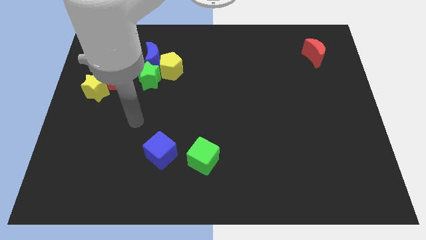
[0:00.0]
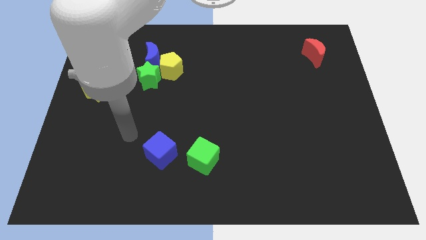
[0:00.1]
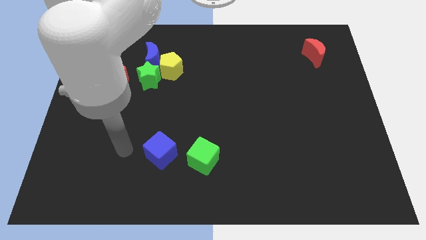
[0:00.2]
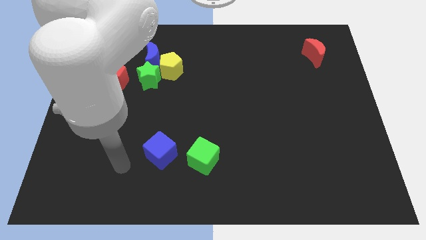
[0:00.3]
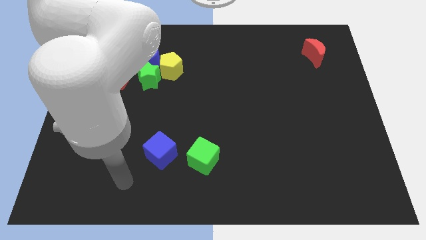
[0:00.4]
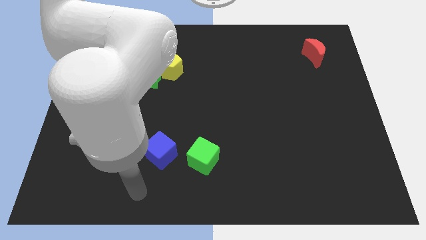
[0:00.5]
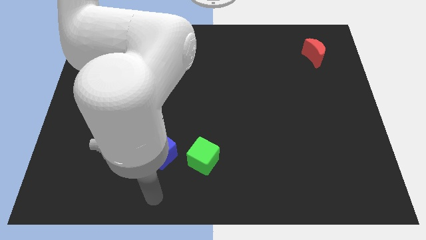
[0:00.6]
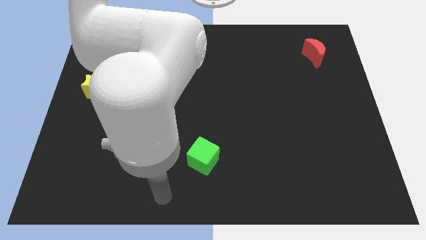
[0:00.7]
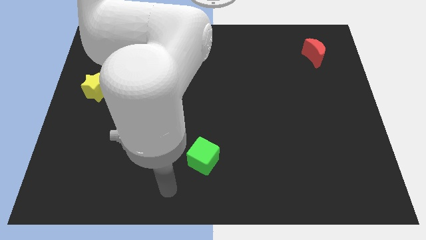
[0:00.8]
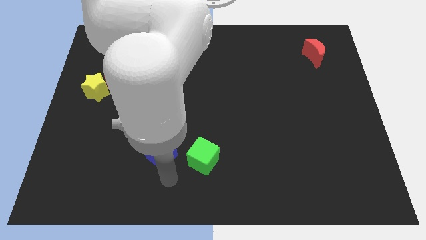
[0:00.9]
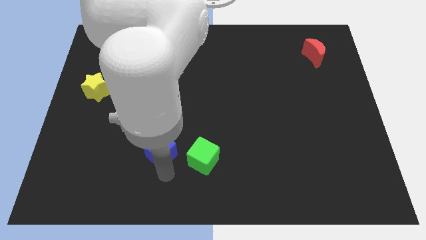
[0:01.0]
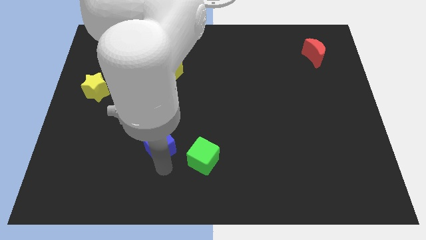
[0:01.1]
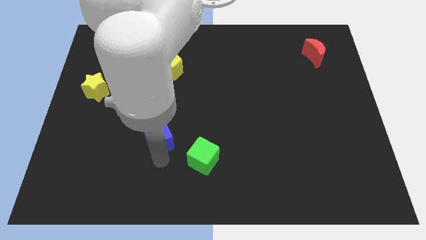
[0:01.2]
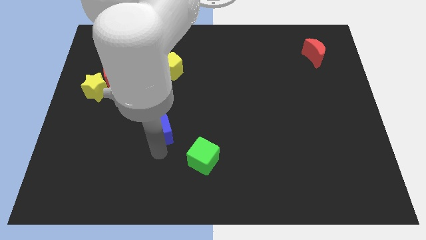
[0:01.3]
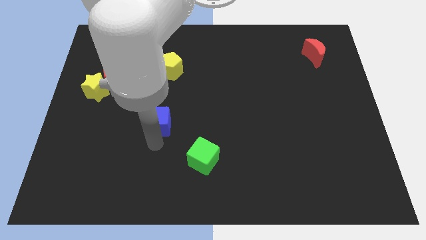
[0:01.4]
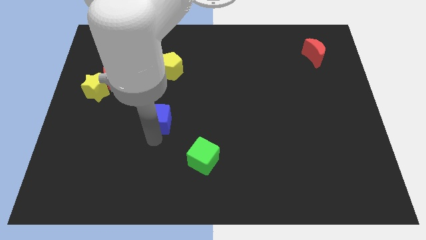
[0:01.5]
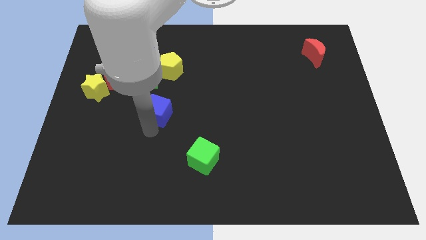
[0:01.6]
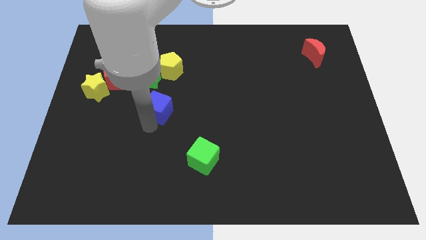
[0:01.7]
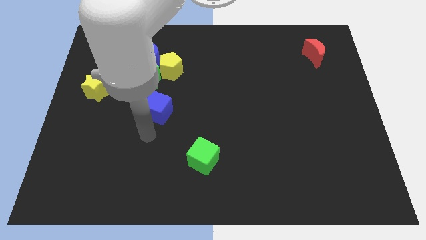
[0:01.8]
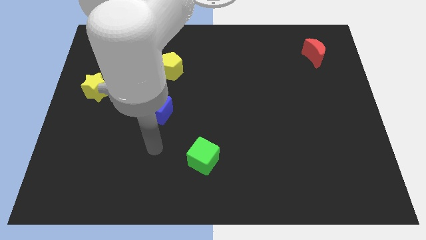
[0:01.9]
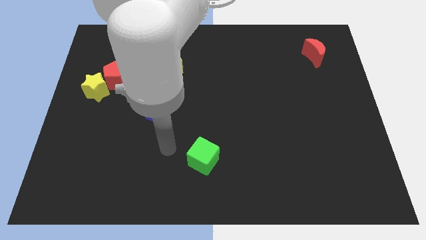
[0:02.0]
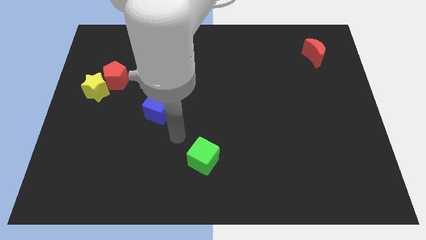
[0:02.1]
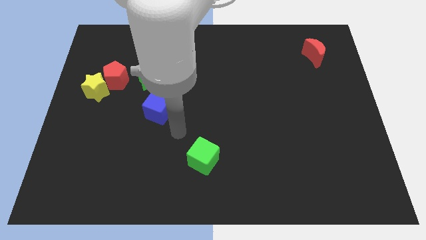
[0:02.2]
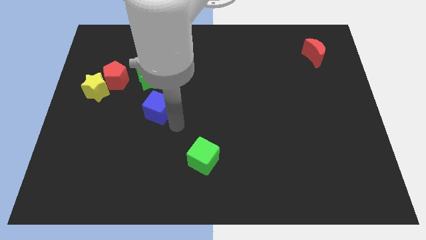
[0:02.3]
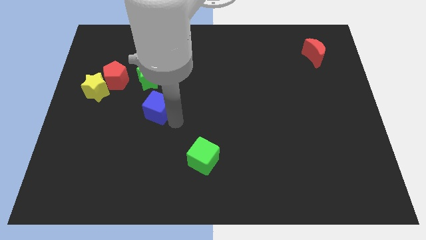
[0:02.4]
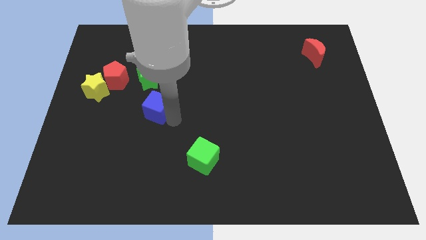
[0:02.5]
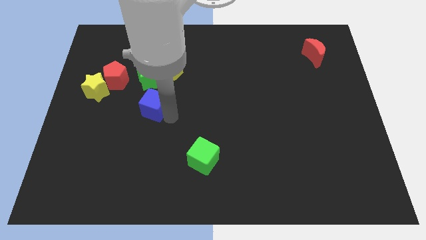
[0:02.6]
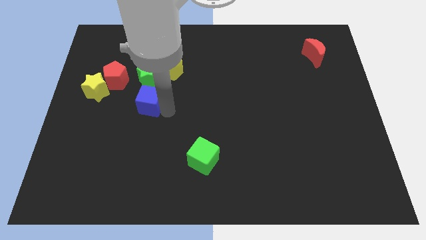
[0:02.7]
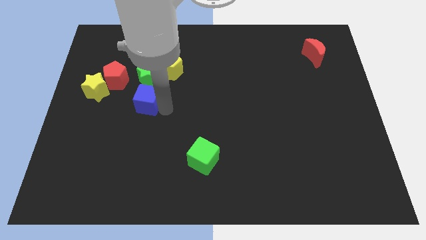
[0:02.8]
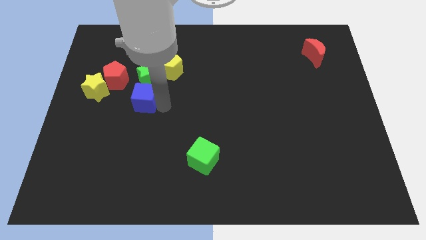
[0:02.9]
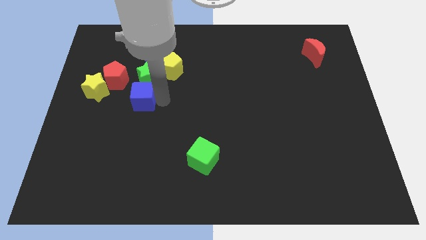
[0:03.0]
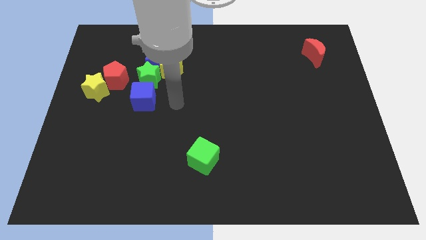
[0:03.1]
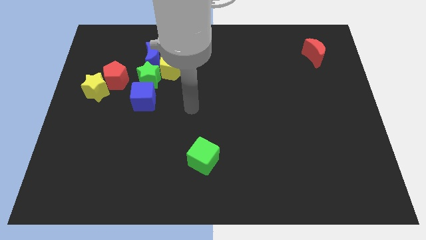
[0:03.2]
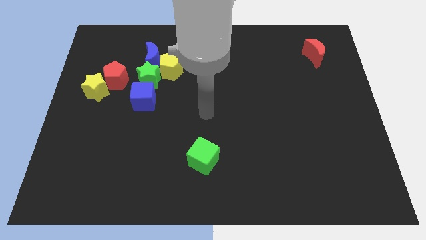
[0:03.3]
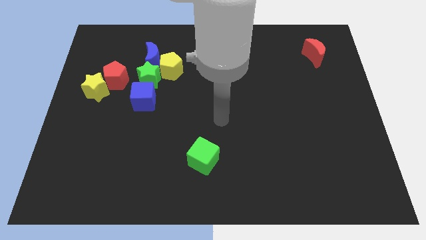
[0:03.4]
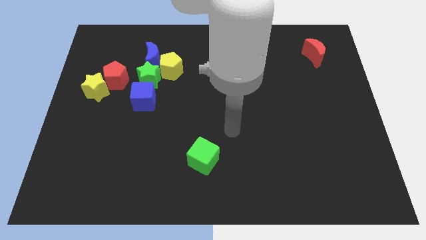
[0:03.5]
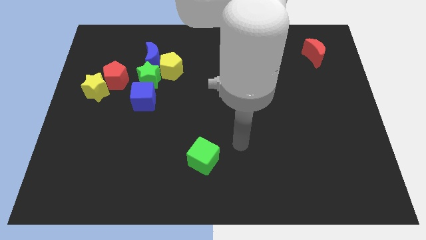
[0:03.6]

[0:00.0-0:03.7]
place the blue cube underneath the green star

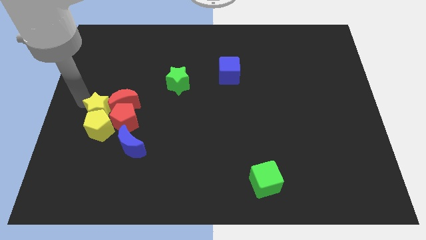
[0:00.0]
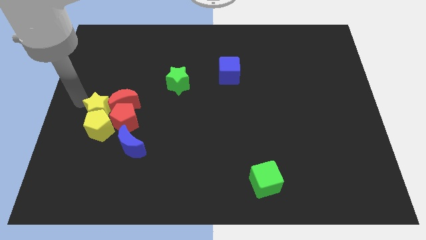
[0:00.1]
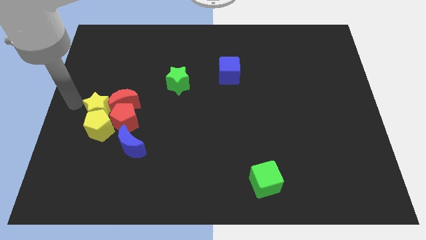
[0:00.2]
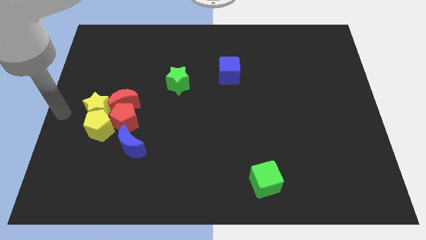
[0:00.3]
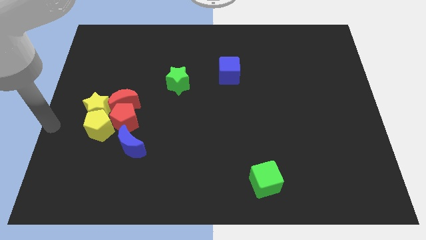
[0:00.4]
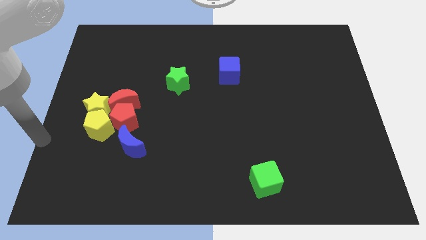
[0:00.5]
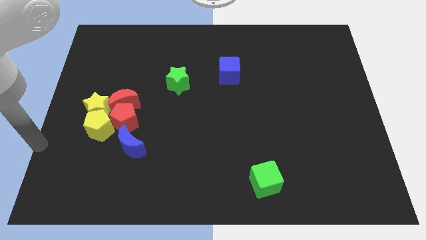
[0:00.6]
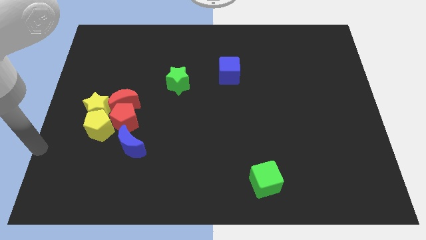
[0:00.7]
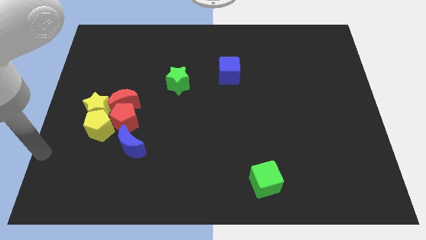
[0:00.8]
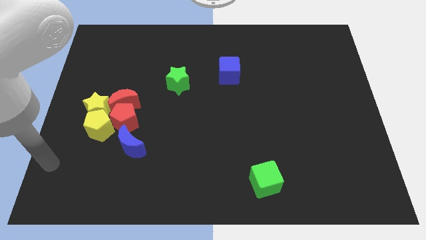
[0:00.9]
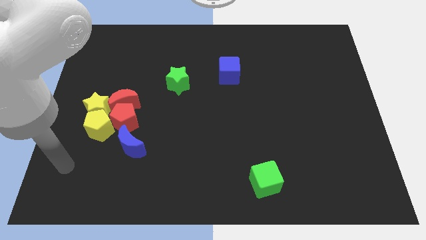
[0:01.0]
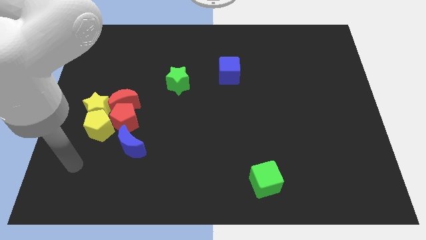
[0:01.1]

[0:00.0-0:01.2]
go away from the group of blocks

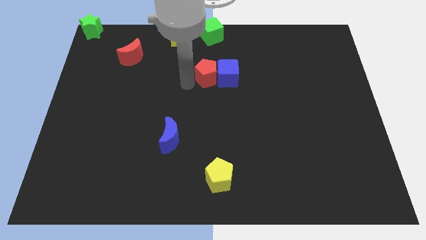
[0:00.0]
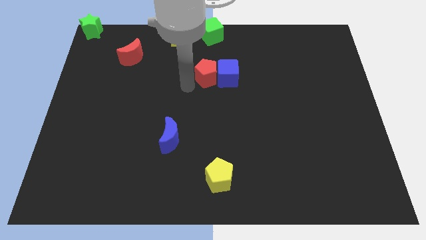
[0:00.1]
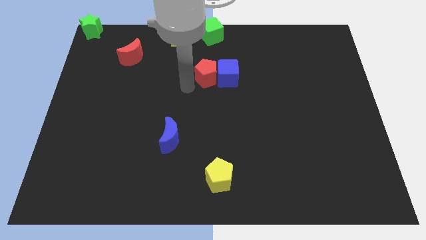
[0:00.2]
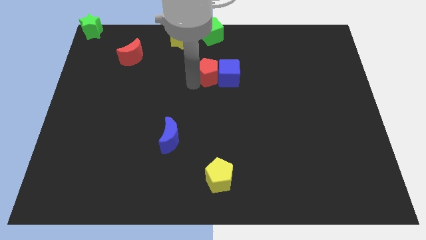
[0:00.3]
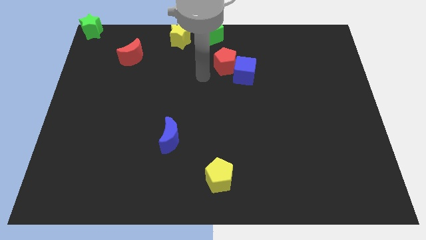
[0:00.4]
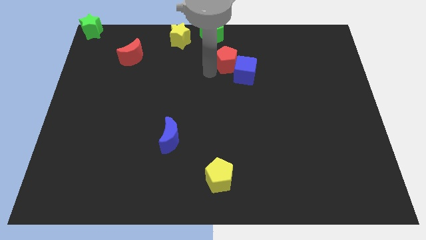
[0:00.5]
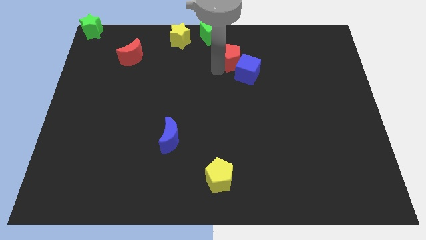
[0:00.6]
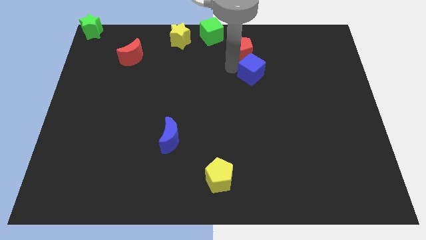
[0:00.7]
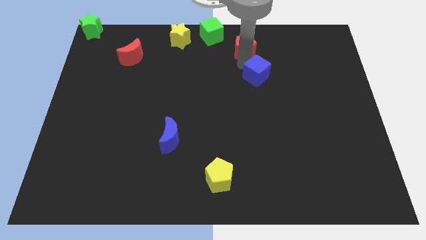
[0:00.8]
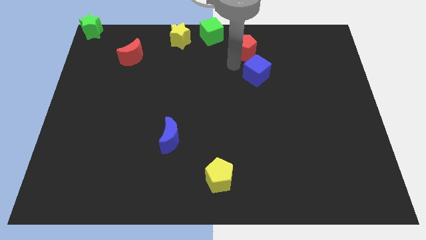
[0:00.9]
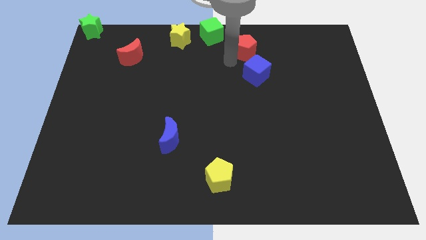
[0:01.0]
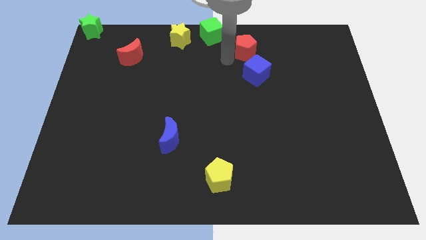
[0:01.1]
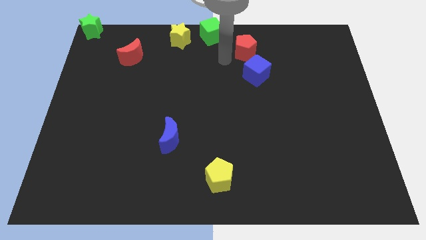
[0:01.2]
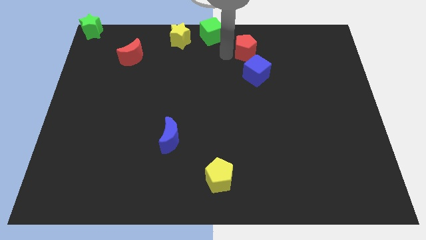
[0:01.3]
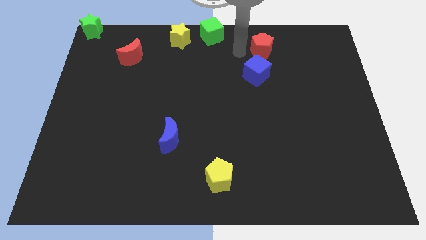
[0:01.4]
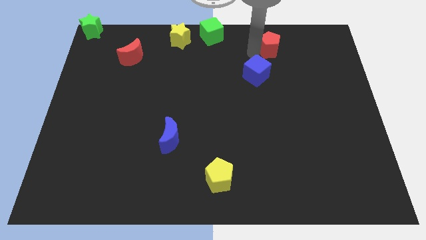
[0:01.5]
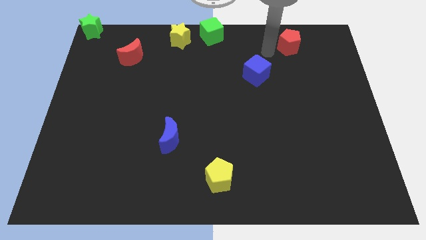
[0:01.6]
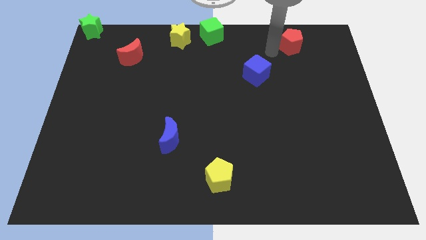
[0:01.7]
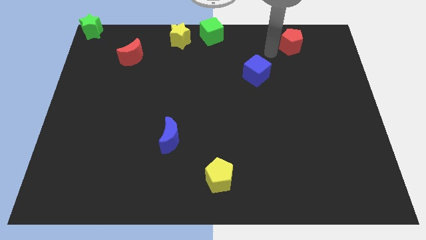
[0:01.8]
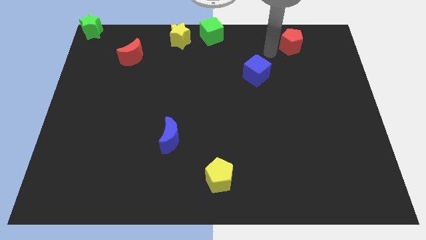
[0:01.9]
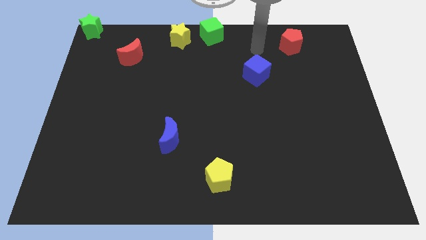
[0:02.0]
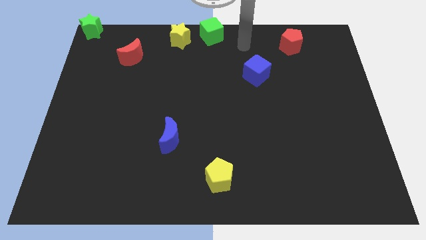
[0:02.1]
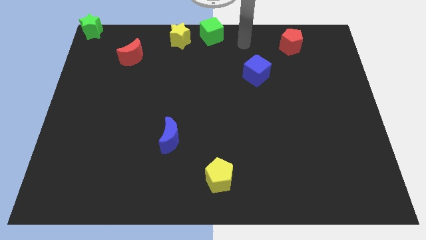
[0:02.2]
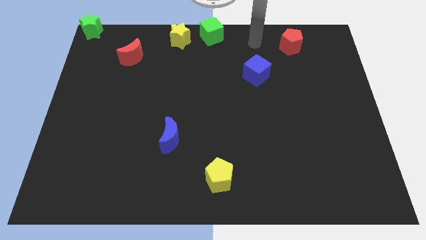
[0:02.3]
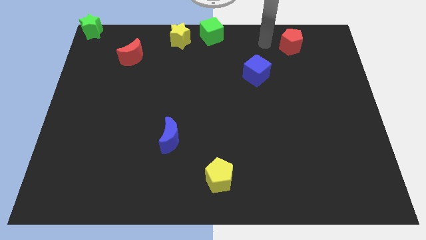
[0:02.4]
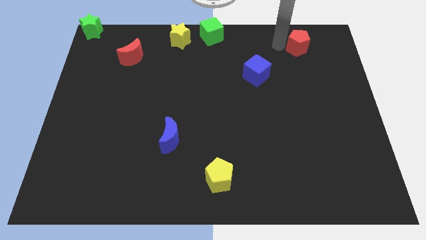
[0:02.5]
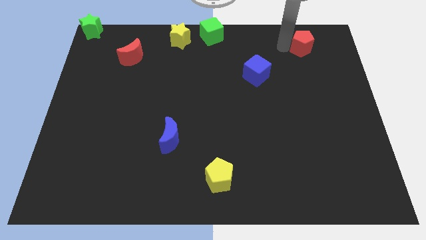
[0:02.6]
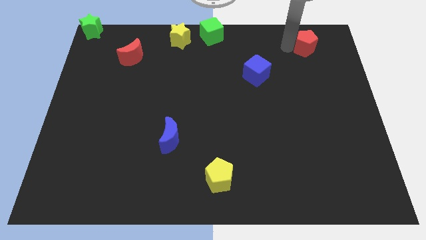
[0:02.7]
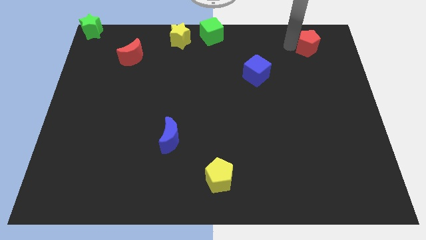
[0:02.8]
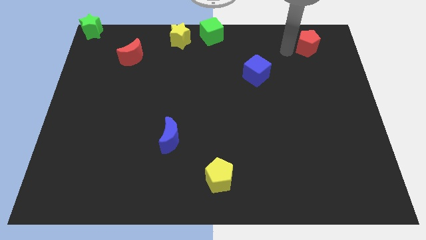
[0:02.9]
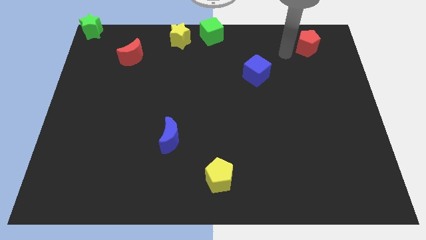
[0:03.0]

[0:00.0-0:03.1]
move the red pentagon diagonally to the top right of blue cube

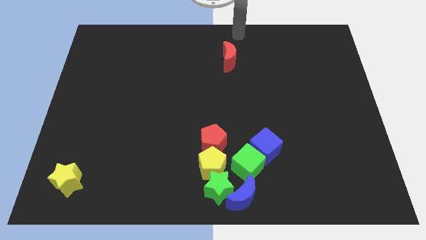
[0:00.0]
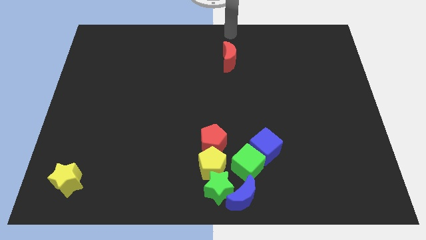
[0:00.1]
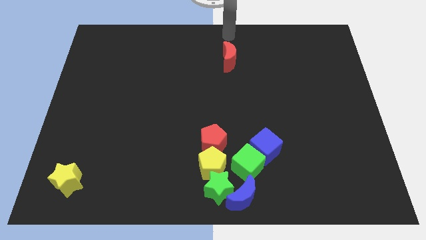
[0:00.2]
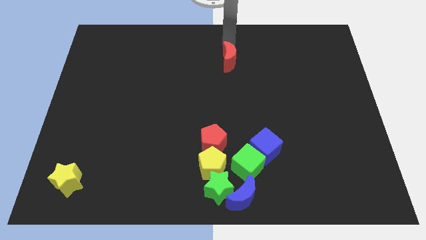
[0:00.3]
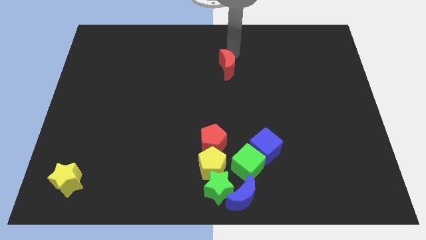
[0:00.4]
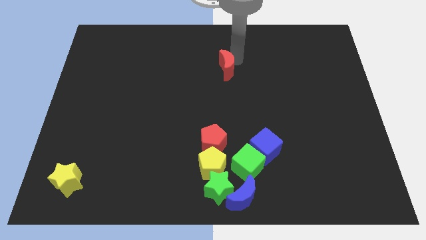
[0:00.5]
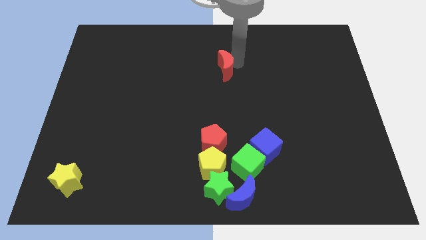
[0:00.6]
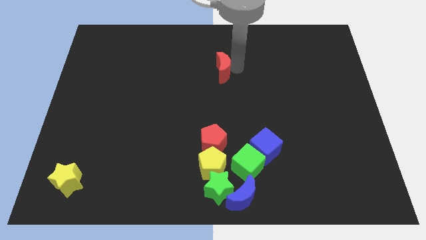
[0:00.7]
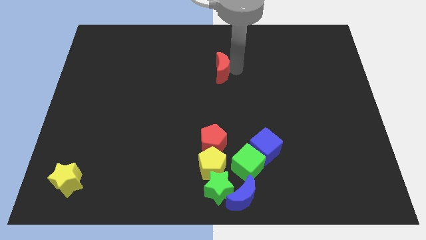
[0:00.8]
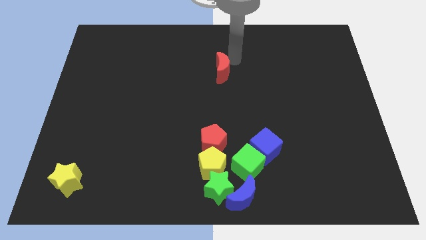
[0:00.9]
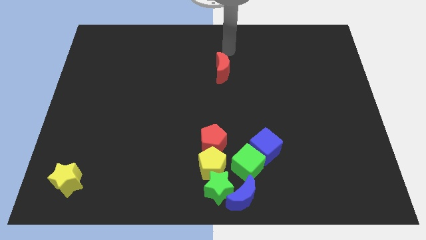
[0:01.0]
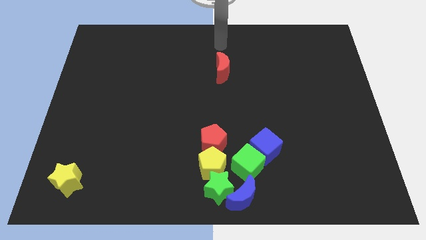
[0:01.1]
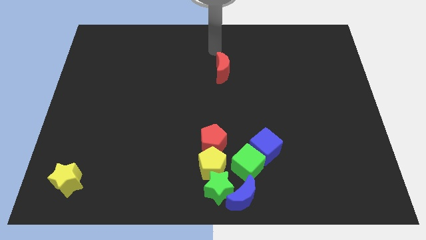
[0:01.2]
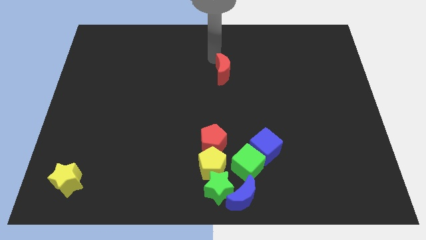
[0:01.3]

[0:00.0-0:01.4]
move red moon slightly downwards
